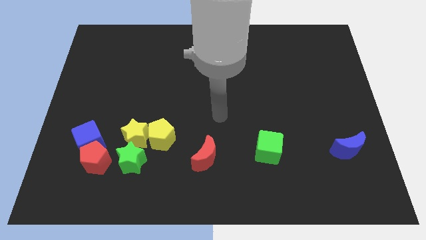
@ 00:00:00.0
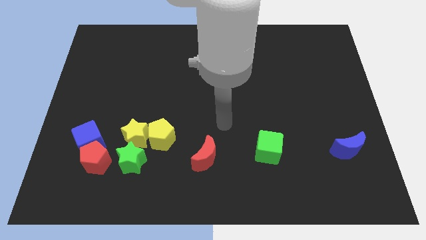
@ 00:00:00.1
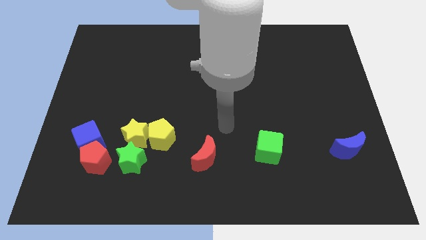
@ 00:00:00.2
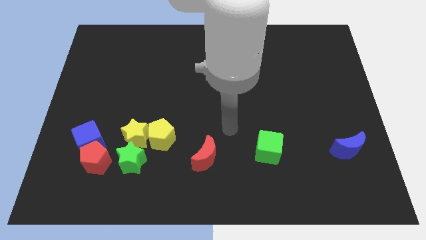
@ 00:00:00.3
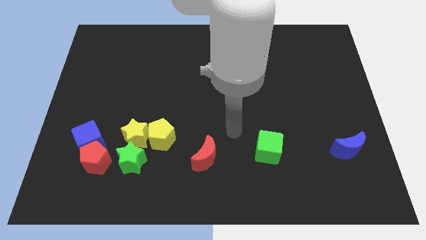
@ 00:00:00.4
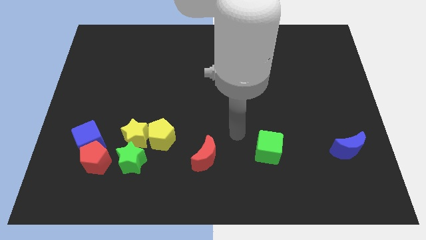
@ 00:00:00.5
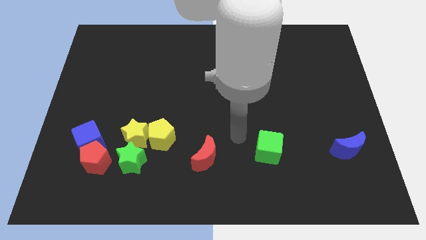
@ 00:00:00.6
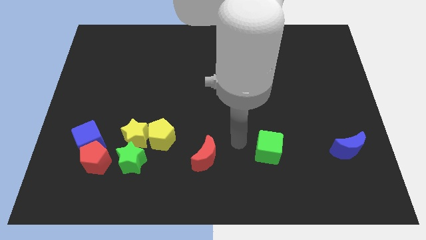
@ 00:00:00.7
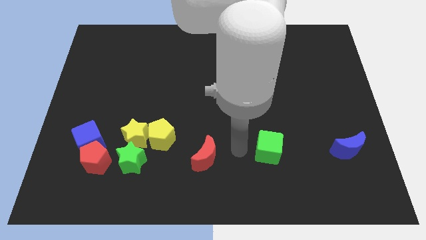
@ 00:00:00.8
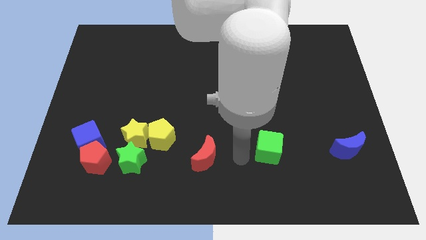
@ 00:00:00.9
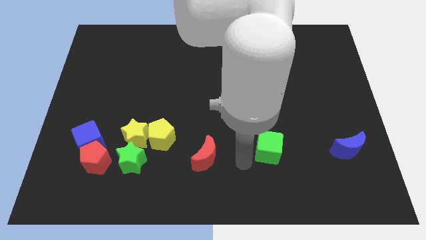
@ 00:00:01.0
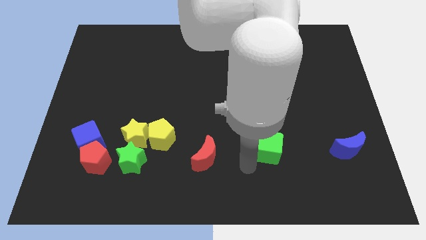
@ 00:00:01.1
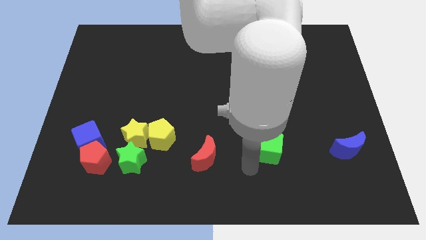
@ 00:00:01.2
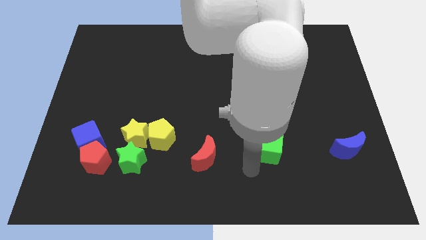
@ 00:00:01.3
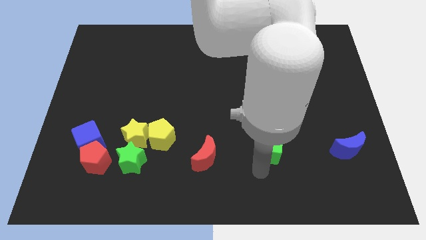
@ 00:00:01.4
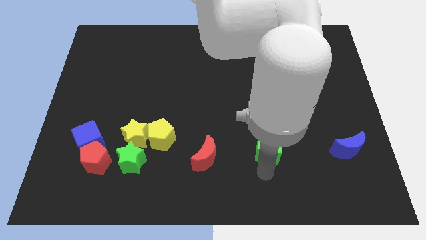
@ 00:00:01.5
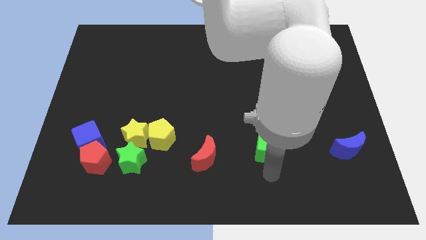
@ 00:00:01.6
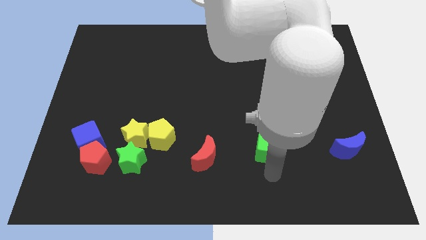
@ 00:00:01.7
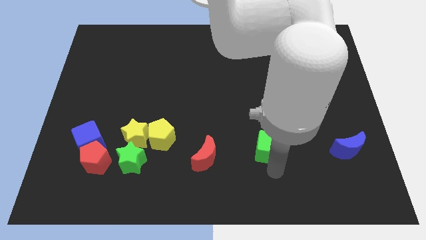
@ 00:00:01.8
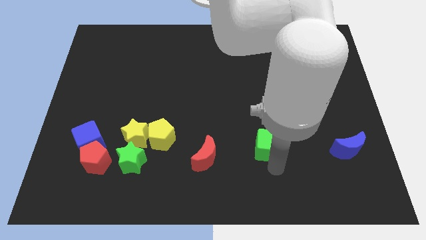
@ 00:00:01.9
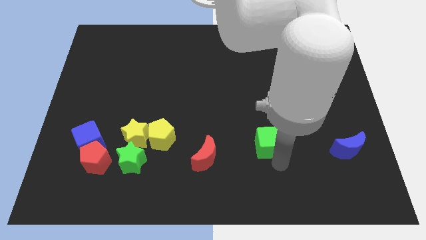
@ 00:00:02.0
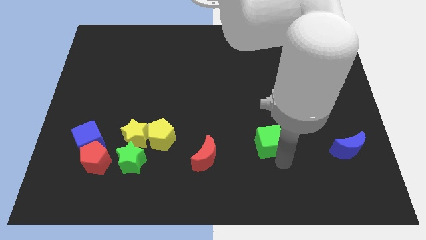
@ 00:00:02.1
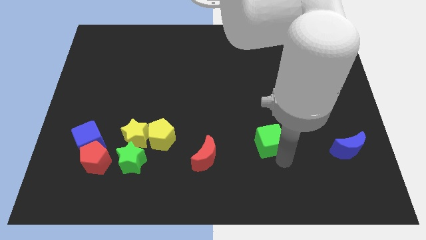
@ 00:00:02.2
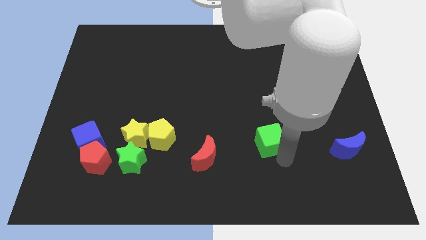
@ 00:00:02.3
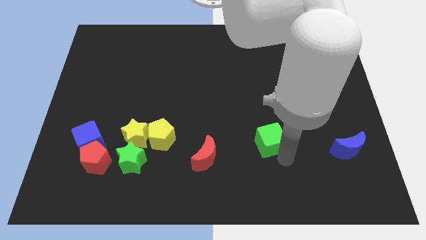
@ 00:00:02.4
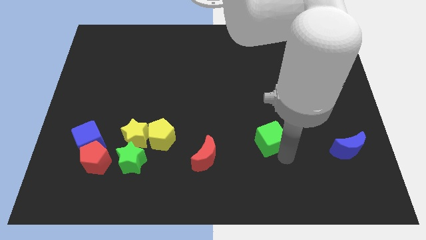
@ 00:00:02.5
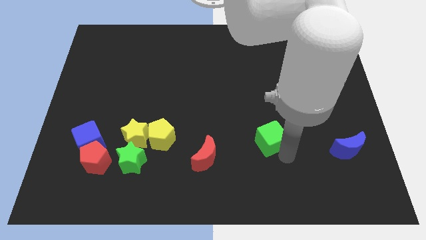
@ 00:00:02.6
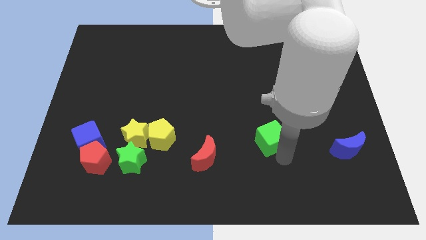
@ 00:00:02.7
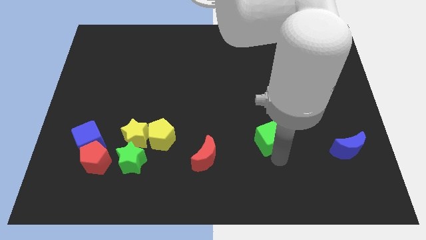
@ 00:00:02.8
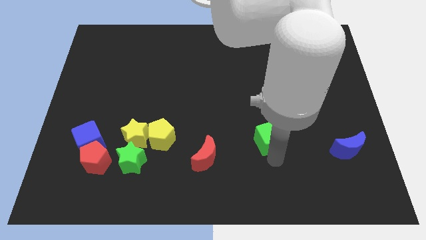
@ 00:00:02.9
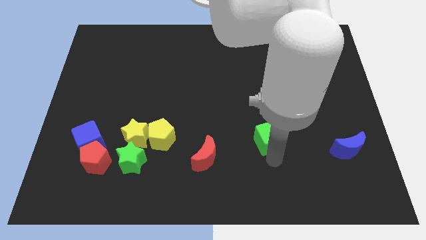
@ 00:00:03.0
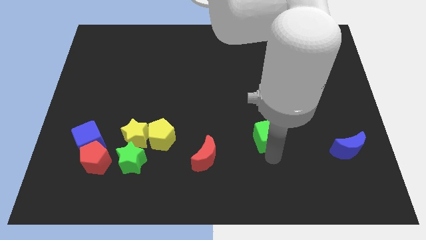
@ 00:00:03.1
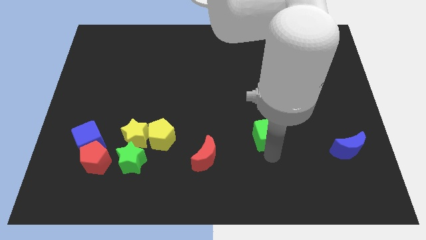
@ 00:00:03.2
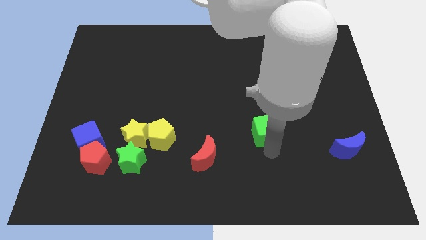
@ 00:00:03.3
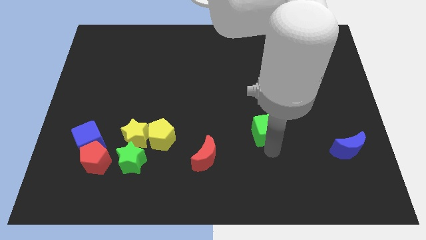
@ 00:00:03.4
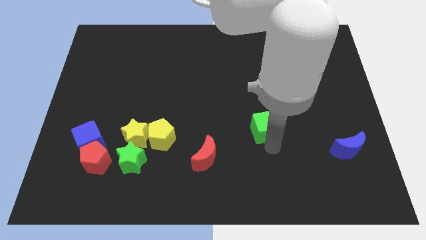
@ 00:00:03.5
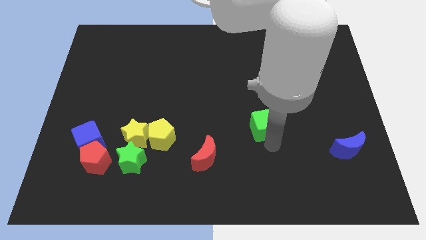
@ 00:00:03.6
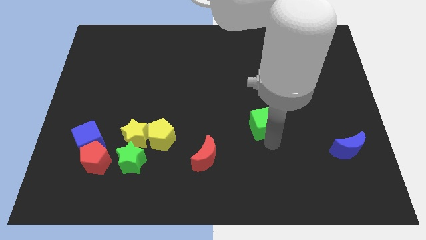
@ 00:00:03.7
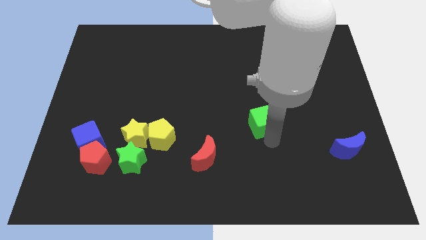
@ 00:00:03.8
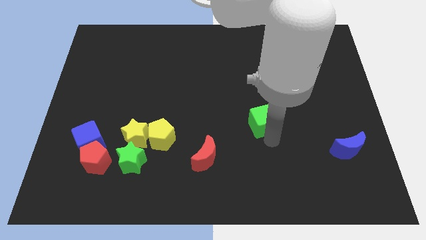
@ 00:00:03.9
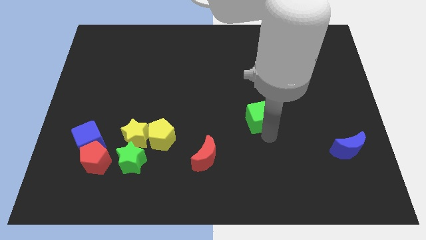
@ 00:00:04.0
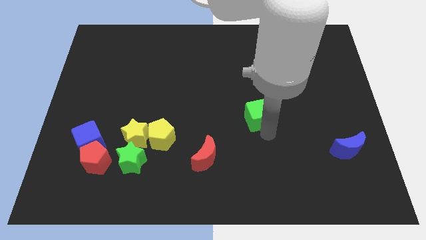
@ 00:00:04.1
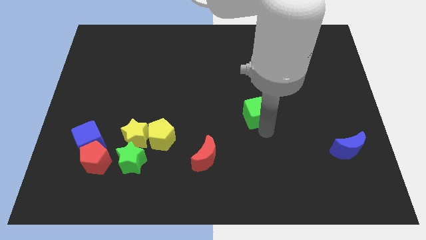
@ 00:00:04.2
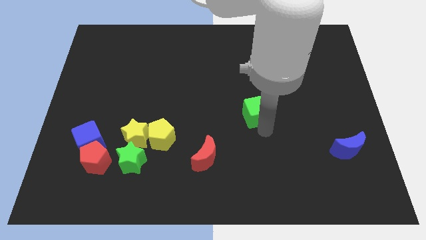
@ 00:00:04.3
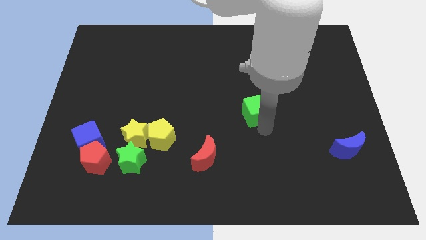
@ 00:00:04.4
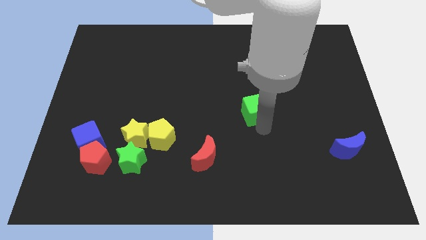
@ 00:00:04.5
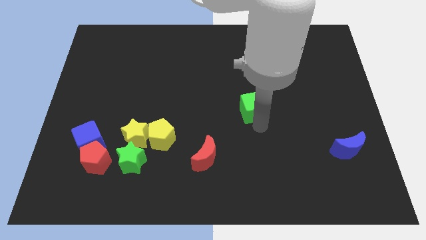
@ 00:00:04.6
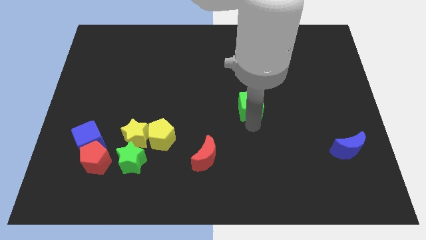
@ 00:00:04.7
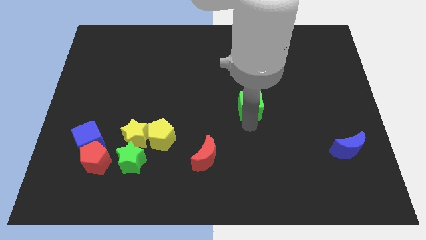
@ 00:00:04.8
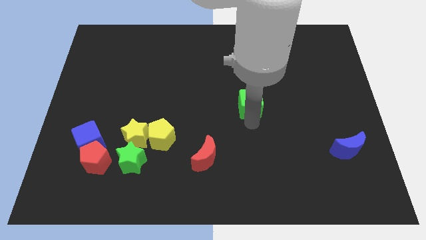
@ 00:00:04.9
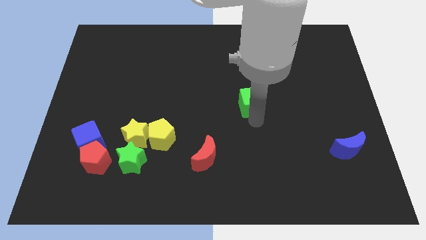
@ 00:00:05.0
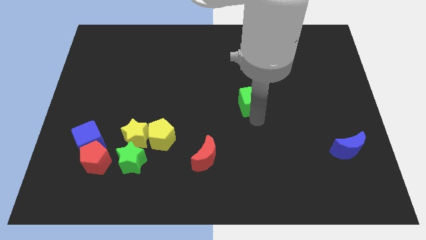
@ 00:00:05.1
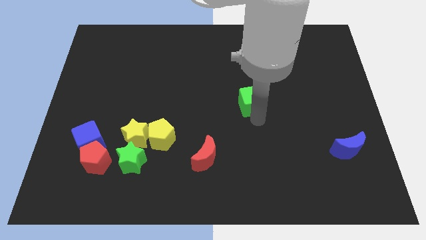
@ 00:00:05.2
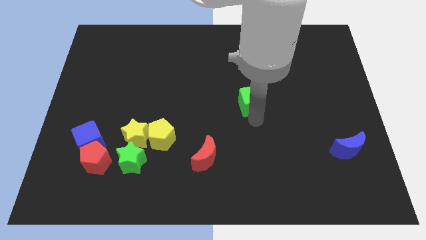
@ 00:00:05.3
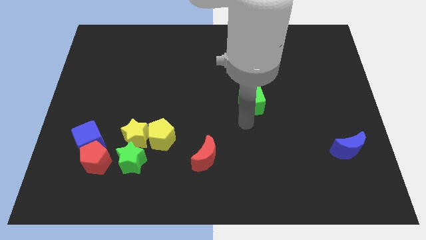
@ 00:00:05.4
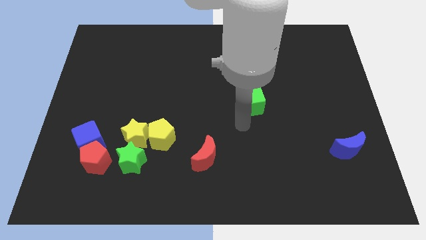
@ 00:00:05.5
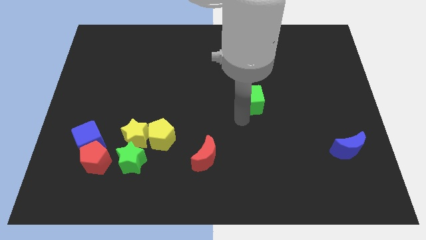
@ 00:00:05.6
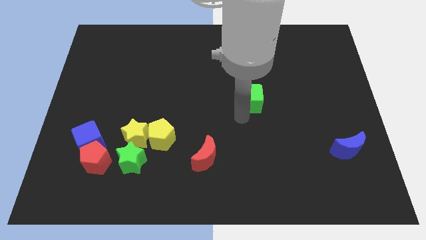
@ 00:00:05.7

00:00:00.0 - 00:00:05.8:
push the green cube towards top

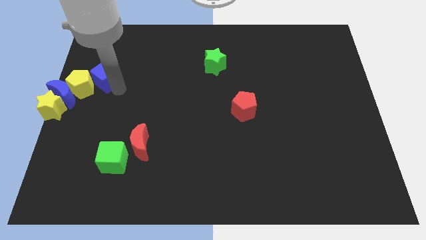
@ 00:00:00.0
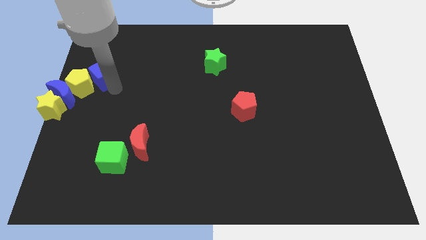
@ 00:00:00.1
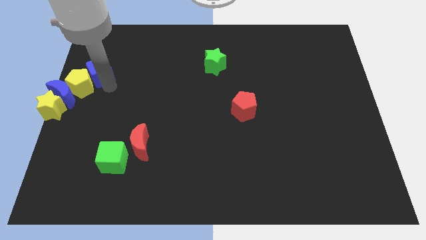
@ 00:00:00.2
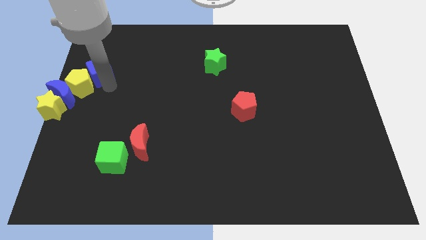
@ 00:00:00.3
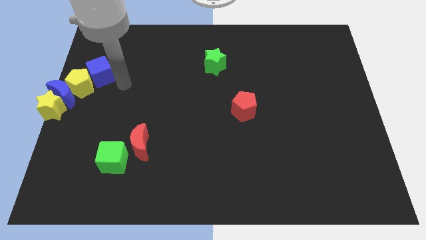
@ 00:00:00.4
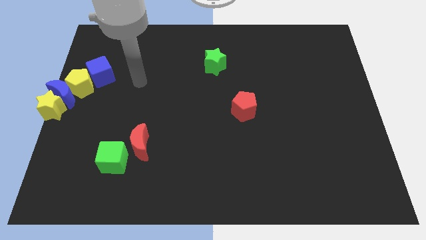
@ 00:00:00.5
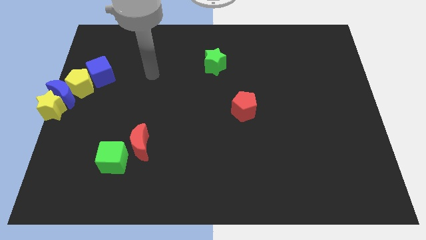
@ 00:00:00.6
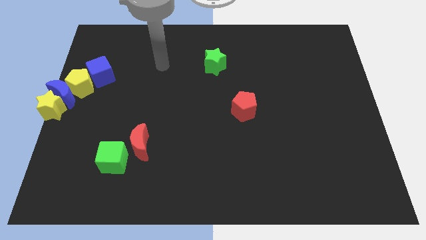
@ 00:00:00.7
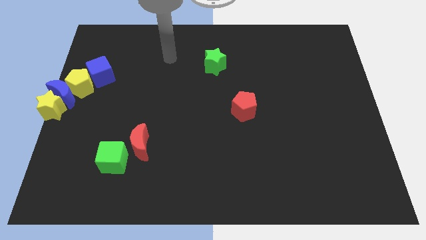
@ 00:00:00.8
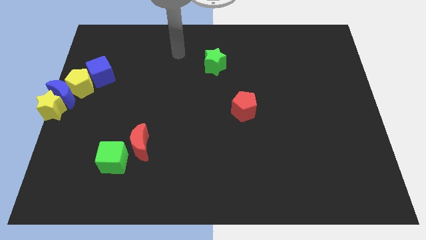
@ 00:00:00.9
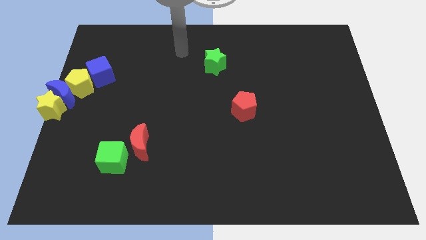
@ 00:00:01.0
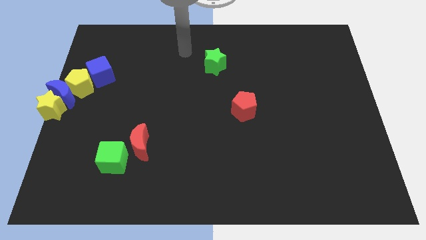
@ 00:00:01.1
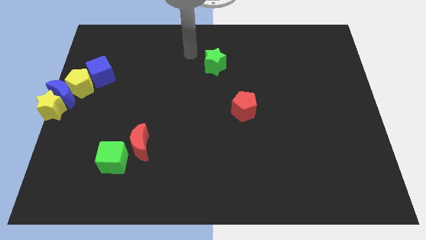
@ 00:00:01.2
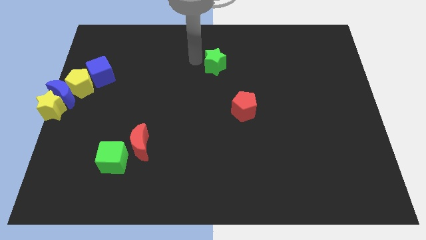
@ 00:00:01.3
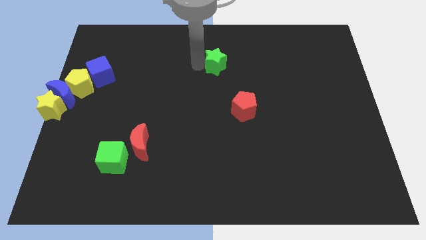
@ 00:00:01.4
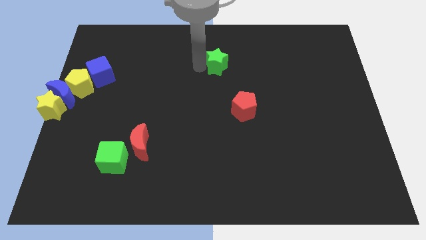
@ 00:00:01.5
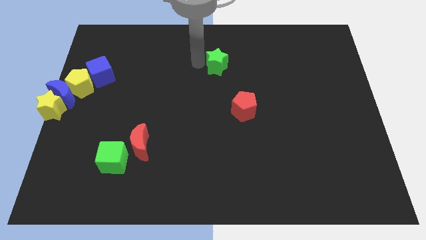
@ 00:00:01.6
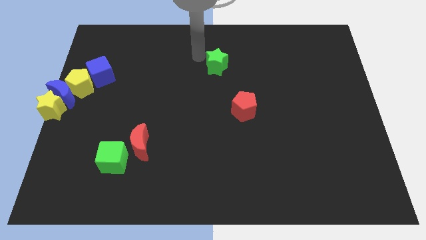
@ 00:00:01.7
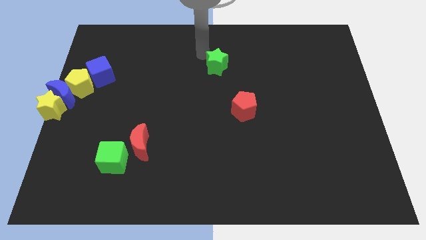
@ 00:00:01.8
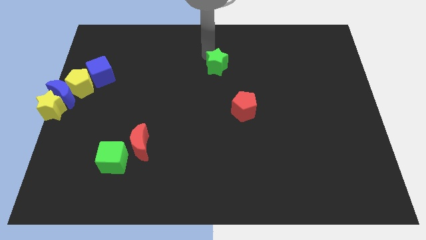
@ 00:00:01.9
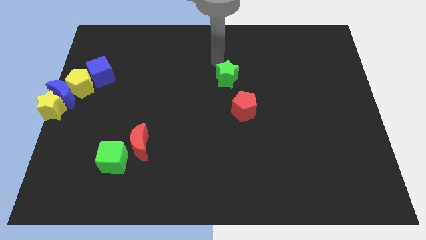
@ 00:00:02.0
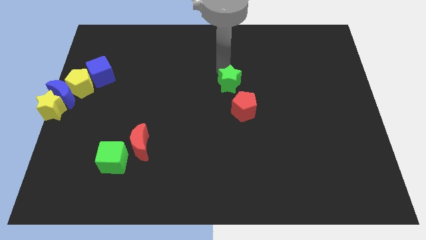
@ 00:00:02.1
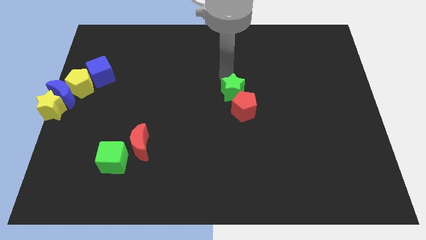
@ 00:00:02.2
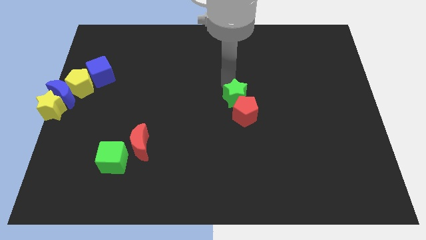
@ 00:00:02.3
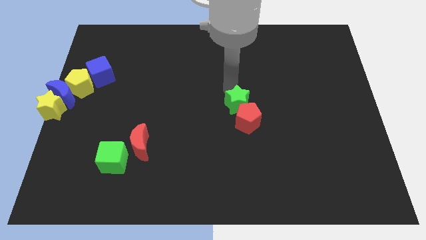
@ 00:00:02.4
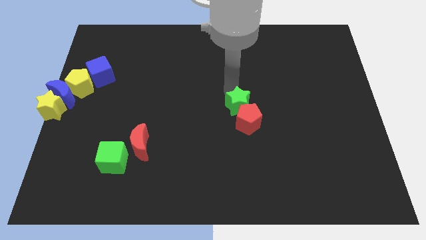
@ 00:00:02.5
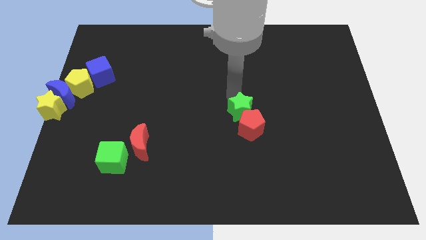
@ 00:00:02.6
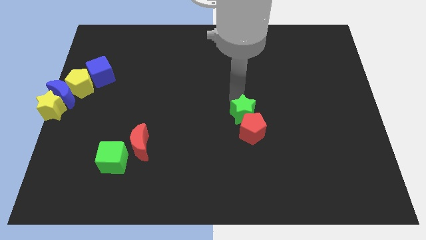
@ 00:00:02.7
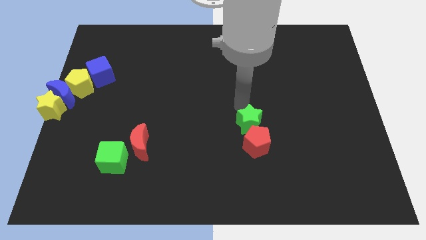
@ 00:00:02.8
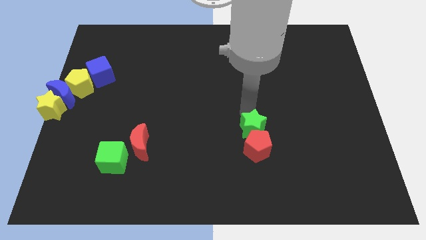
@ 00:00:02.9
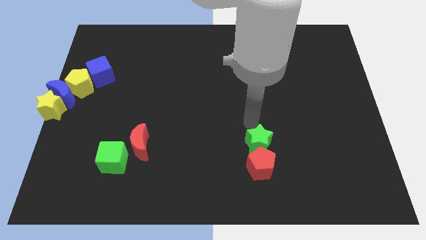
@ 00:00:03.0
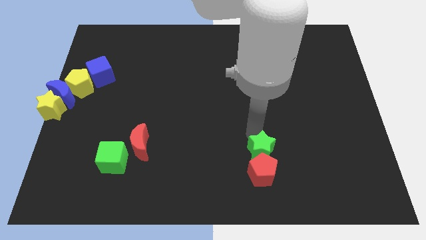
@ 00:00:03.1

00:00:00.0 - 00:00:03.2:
slide the green star into the red pentagon
